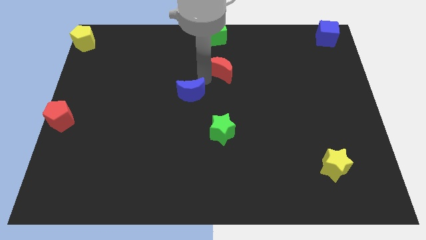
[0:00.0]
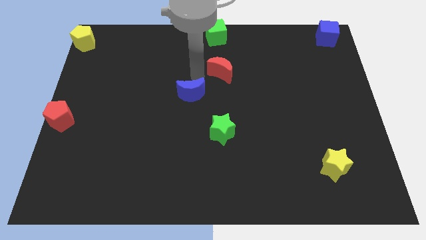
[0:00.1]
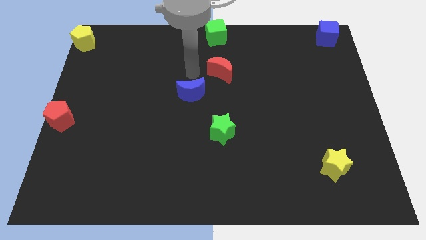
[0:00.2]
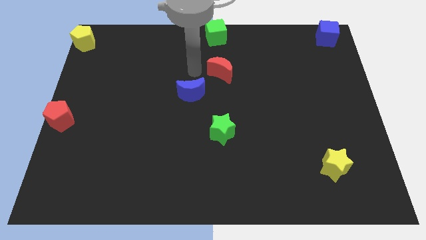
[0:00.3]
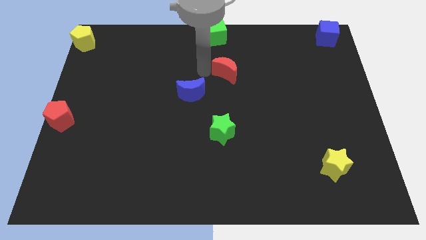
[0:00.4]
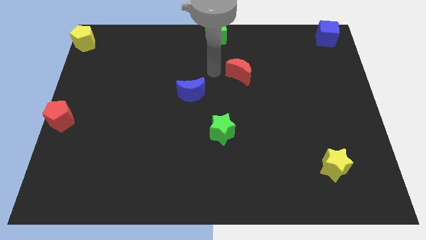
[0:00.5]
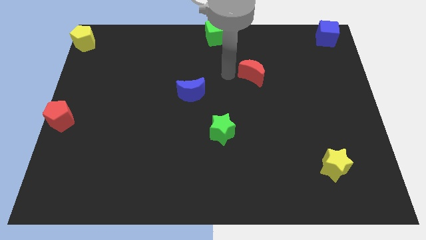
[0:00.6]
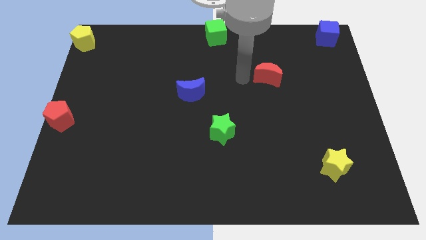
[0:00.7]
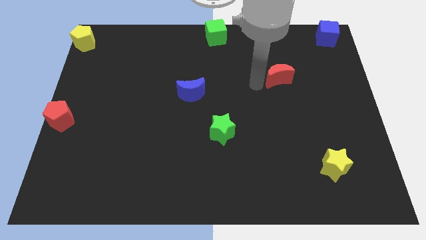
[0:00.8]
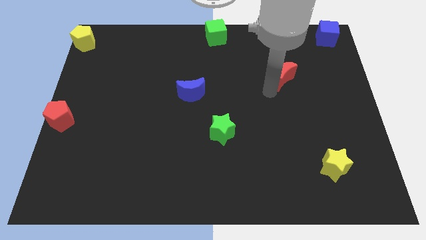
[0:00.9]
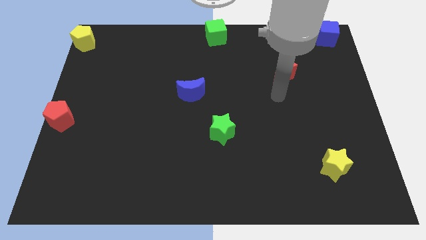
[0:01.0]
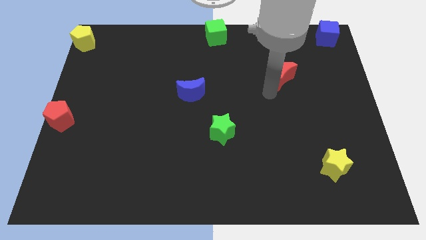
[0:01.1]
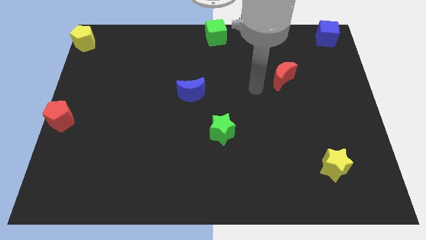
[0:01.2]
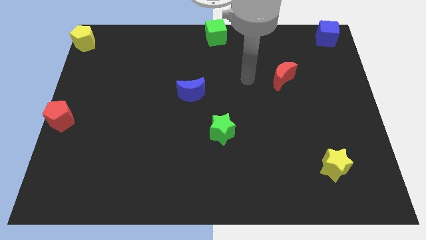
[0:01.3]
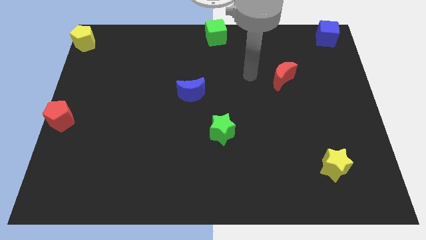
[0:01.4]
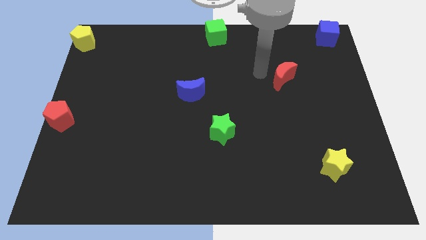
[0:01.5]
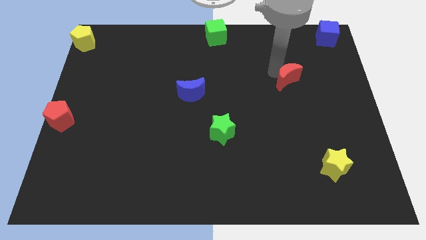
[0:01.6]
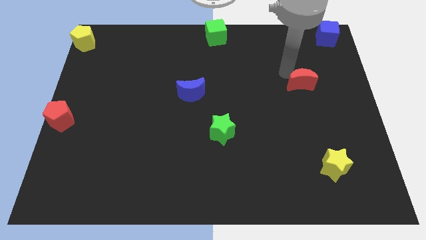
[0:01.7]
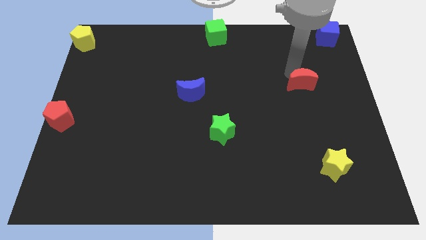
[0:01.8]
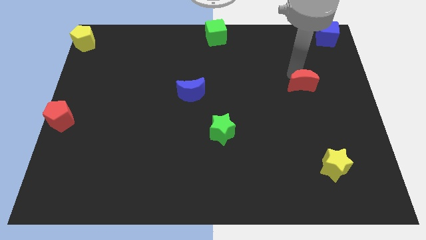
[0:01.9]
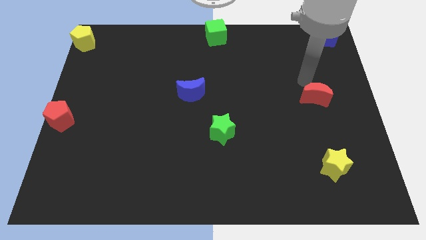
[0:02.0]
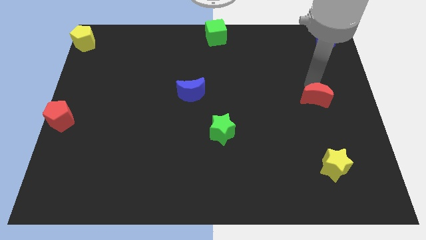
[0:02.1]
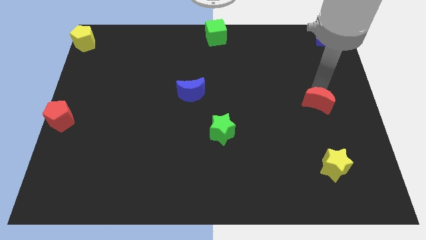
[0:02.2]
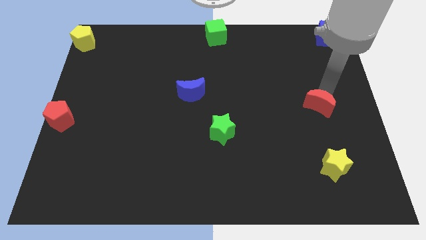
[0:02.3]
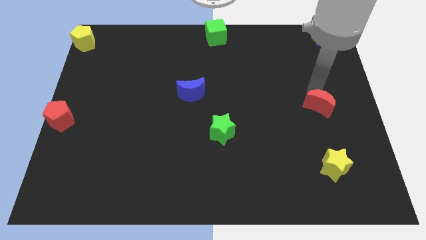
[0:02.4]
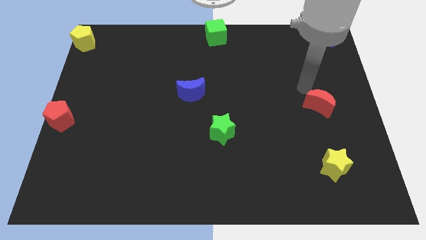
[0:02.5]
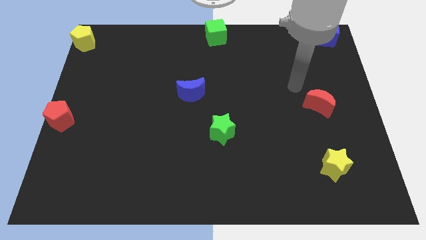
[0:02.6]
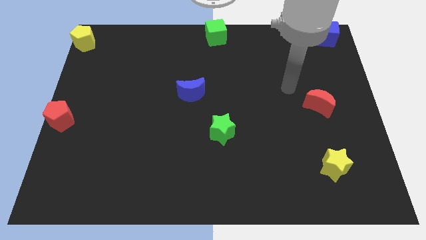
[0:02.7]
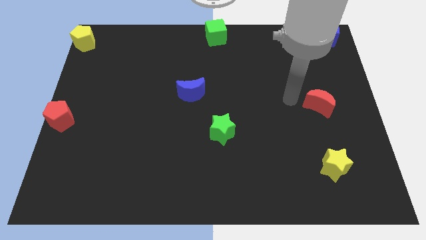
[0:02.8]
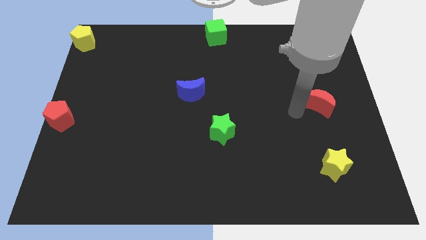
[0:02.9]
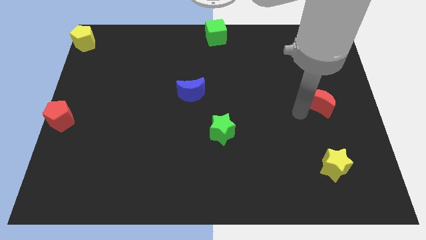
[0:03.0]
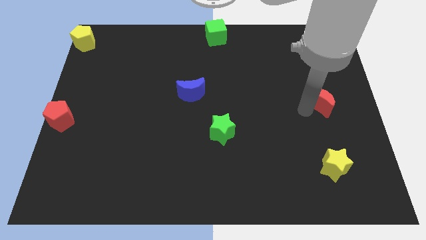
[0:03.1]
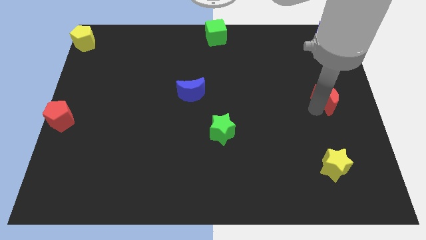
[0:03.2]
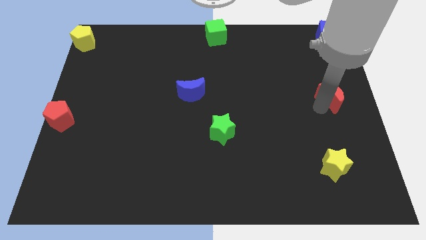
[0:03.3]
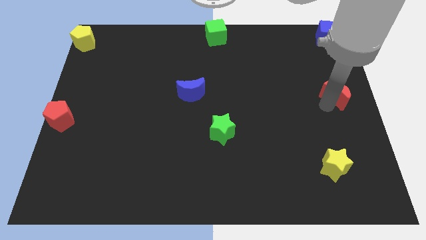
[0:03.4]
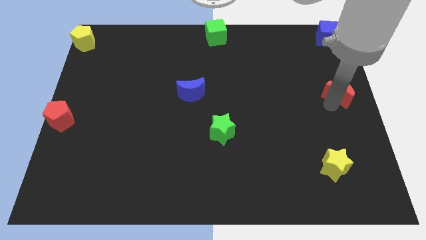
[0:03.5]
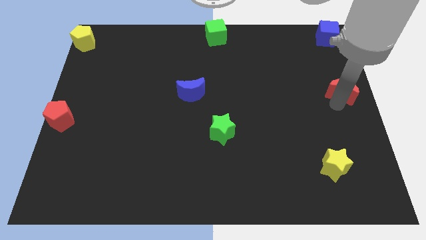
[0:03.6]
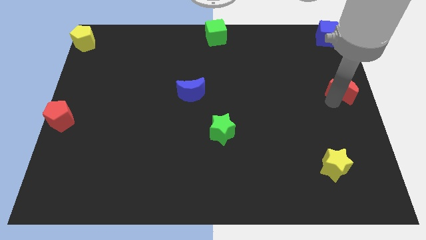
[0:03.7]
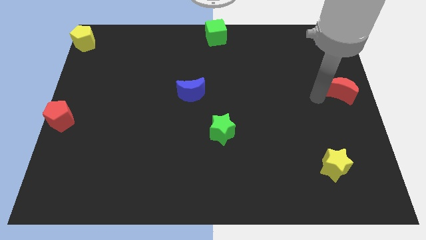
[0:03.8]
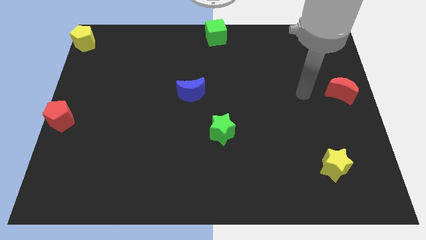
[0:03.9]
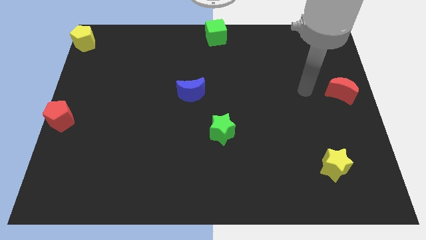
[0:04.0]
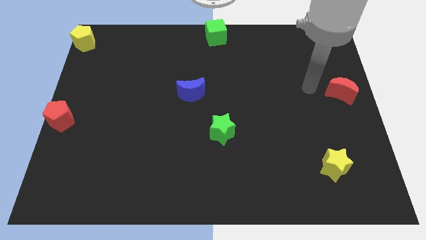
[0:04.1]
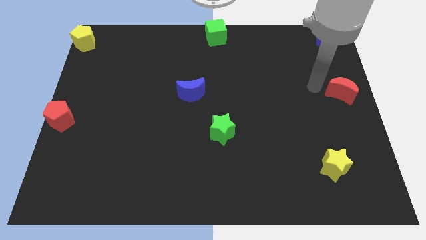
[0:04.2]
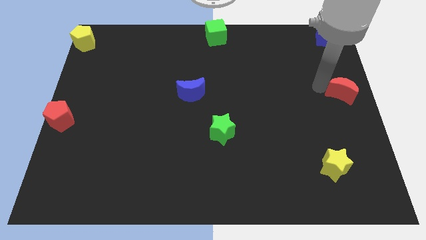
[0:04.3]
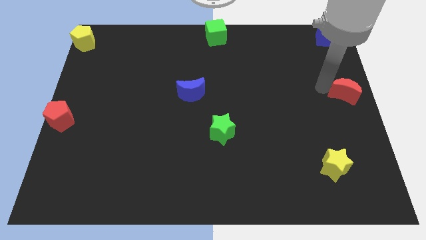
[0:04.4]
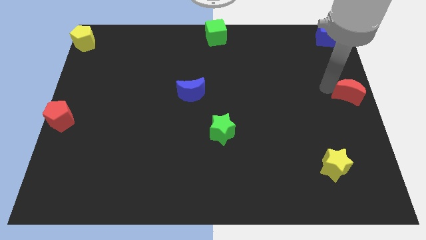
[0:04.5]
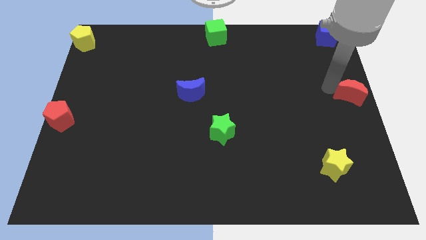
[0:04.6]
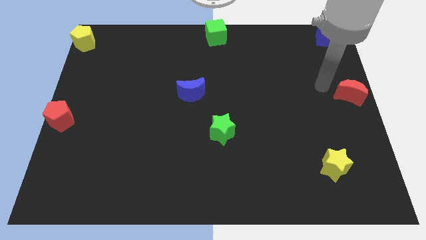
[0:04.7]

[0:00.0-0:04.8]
move the red crescent to the center right of the board

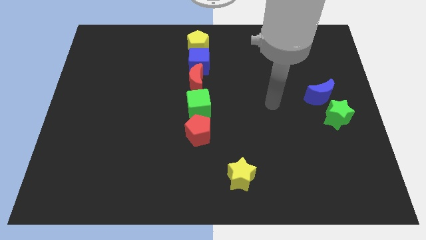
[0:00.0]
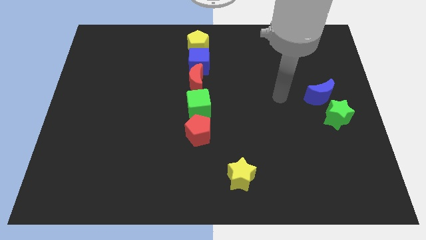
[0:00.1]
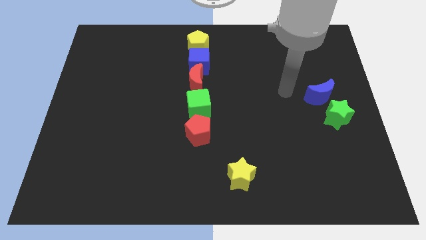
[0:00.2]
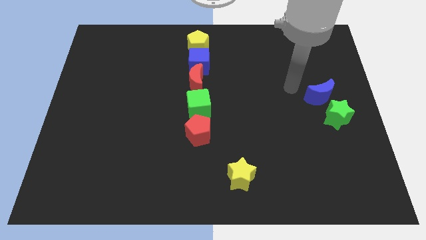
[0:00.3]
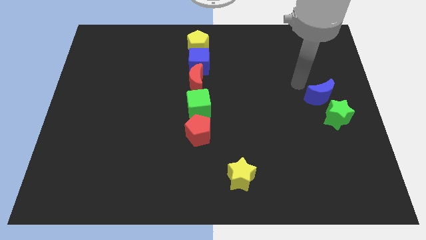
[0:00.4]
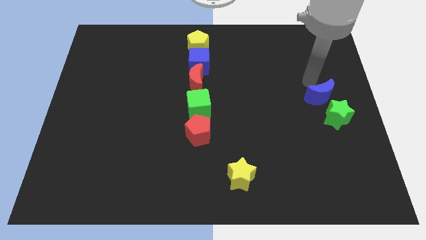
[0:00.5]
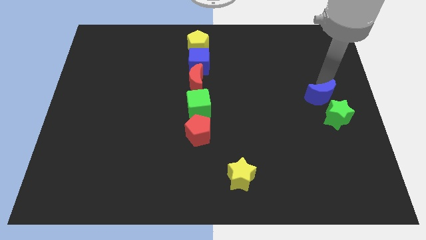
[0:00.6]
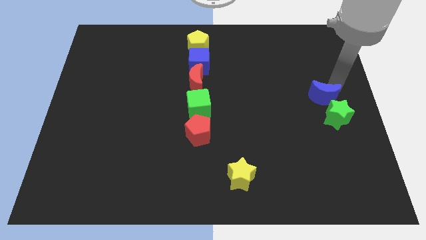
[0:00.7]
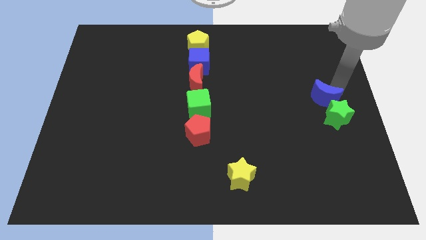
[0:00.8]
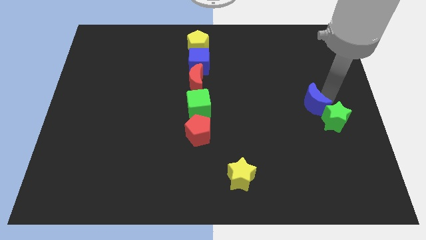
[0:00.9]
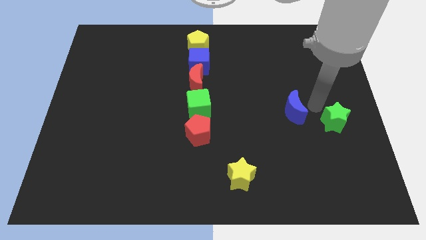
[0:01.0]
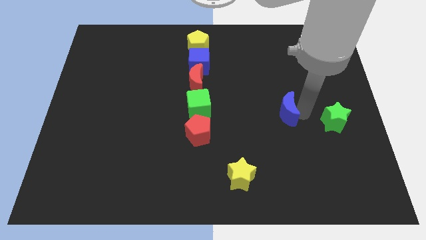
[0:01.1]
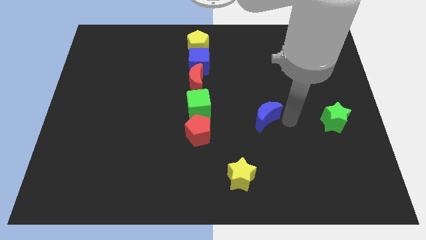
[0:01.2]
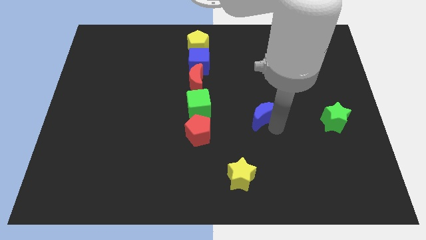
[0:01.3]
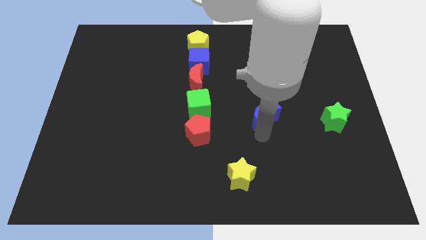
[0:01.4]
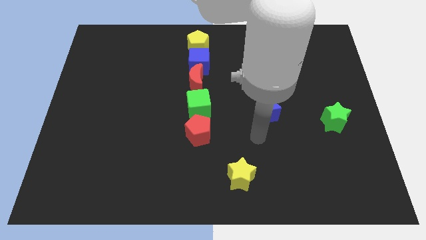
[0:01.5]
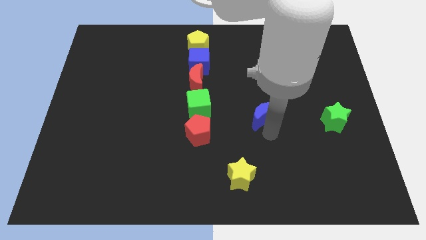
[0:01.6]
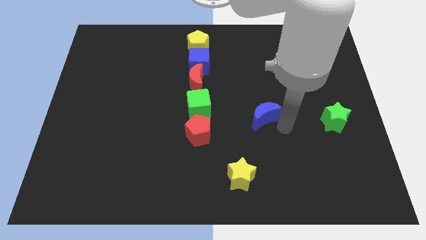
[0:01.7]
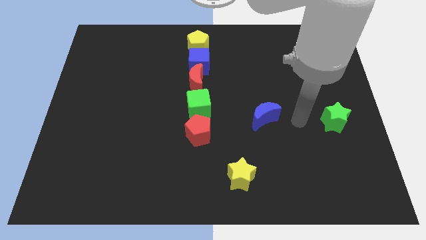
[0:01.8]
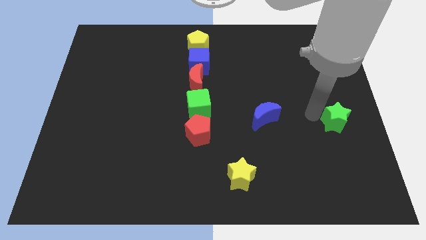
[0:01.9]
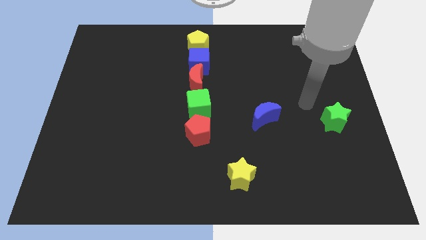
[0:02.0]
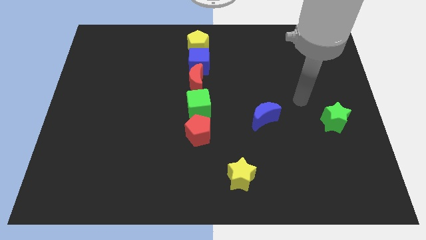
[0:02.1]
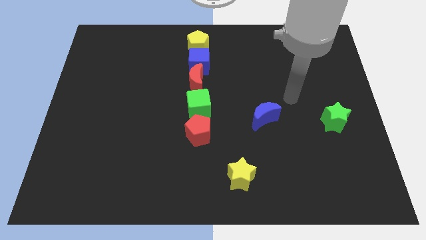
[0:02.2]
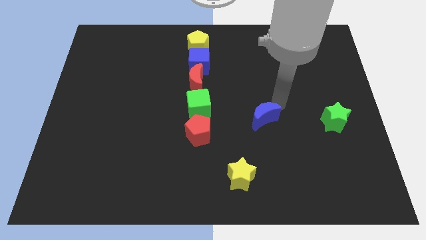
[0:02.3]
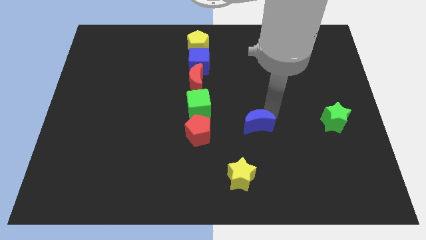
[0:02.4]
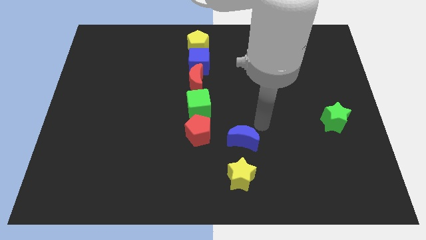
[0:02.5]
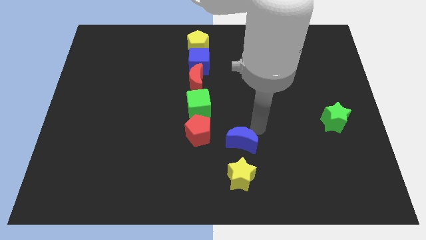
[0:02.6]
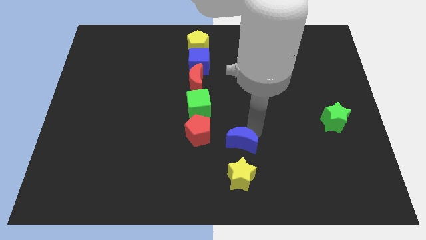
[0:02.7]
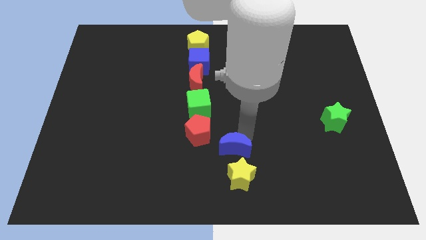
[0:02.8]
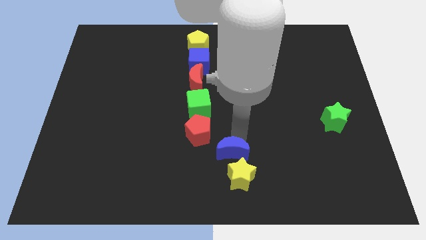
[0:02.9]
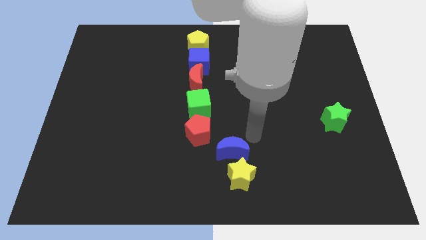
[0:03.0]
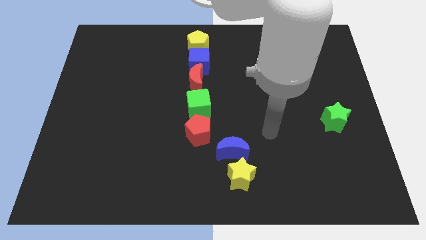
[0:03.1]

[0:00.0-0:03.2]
slide the blue crescent towards bottom center of the red pentagon

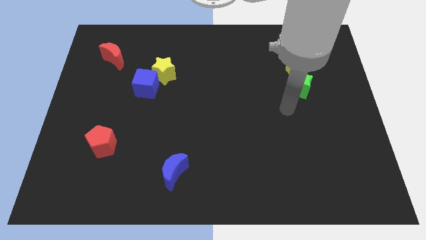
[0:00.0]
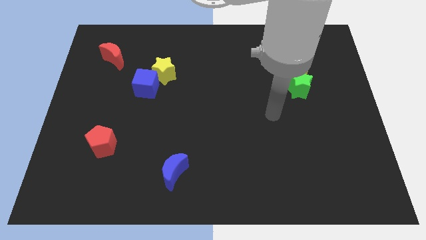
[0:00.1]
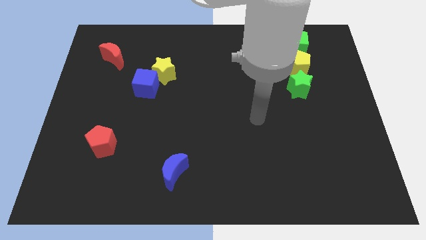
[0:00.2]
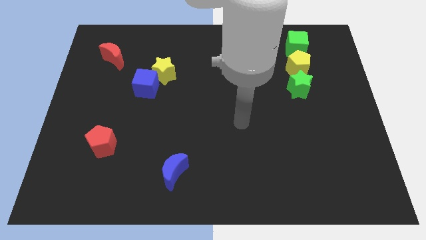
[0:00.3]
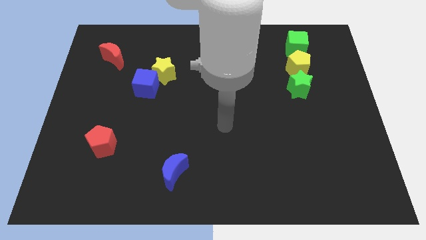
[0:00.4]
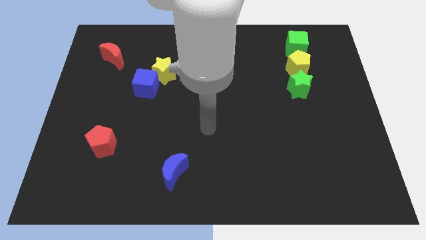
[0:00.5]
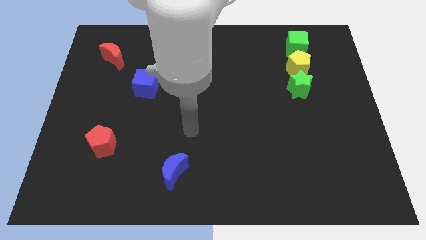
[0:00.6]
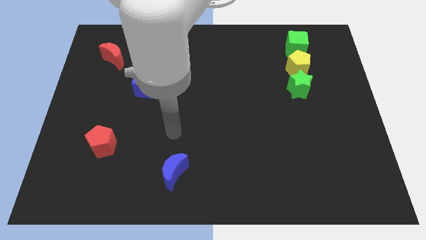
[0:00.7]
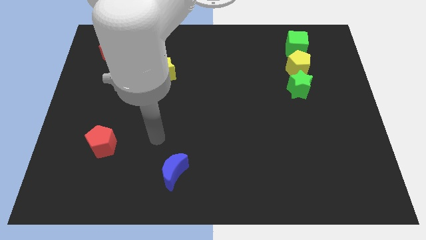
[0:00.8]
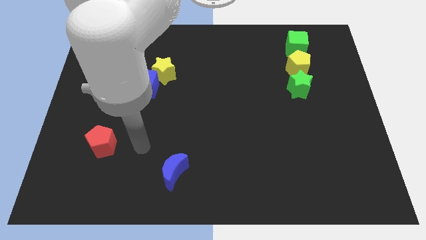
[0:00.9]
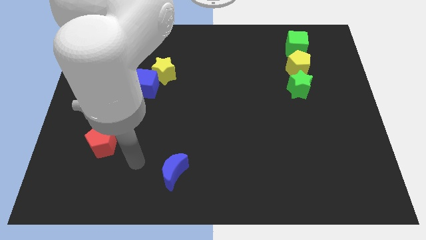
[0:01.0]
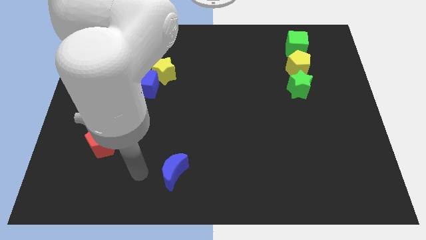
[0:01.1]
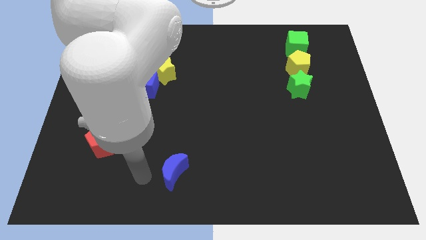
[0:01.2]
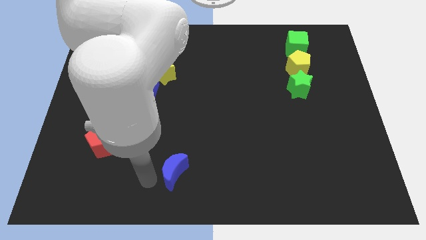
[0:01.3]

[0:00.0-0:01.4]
move yourself away from the green star
